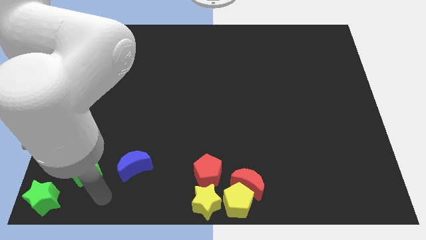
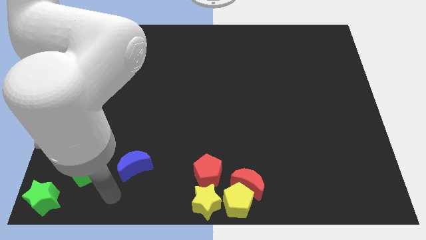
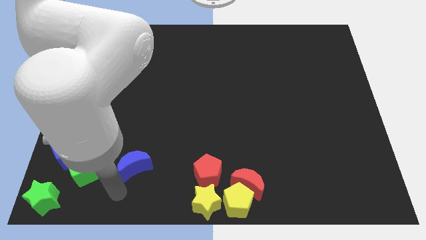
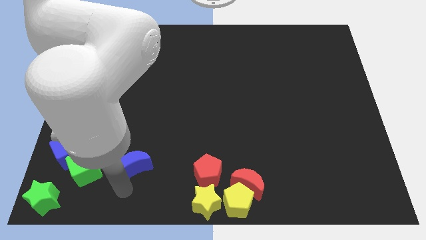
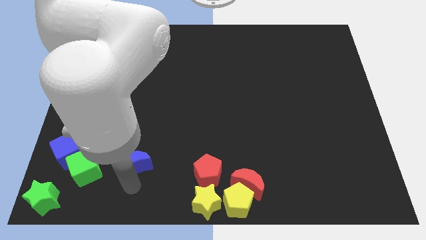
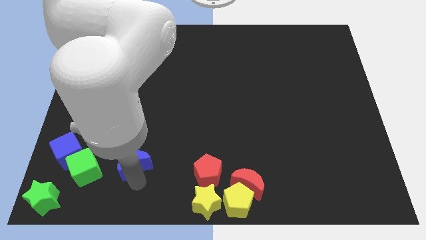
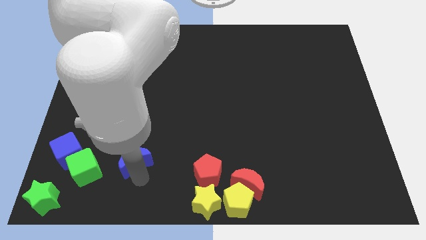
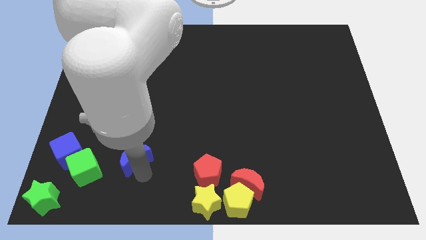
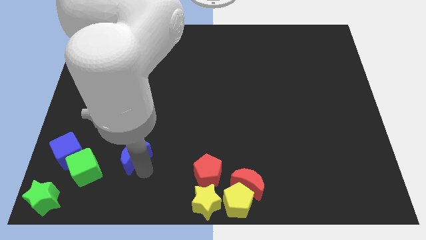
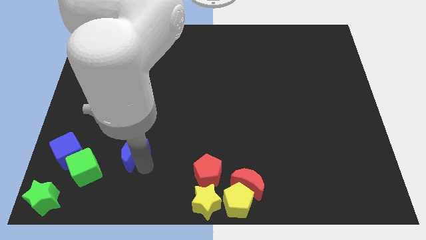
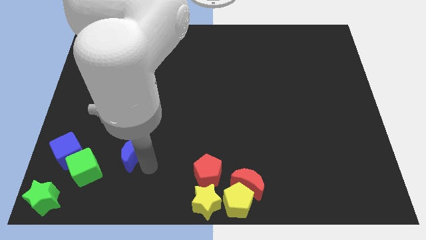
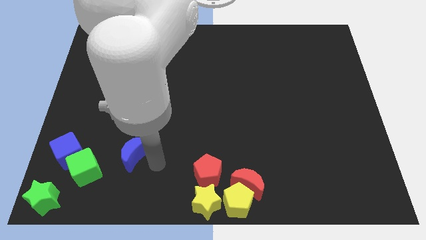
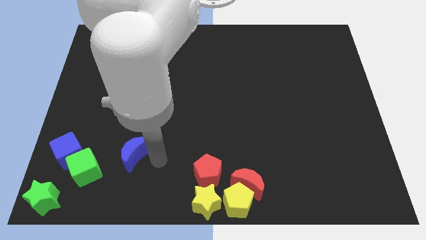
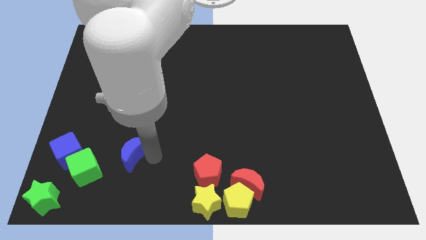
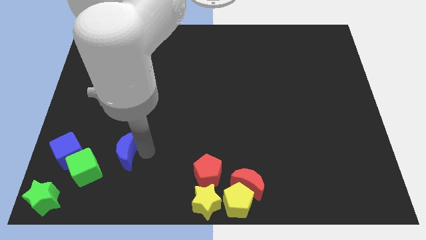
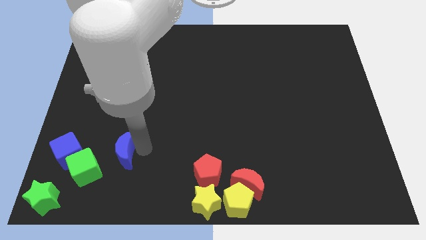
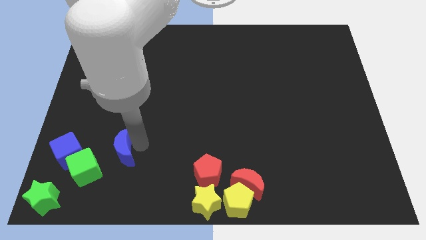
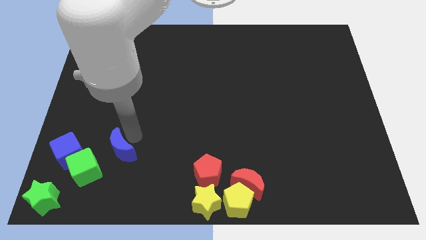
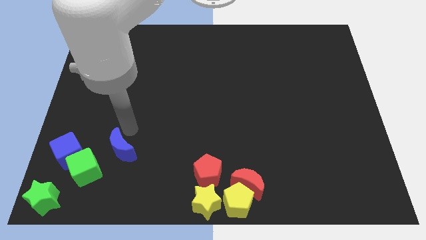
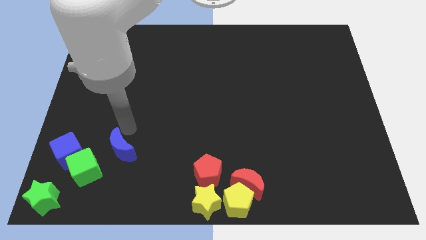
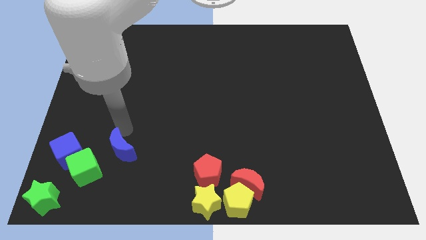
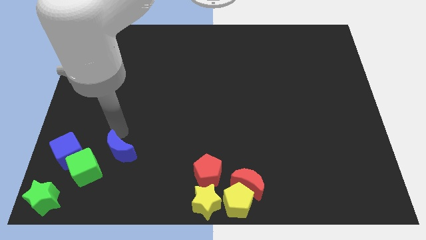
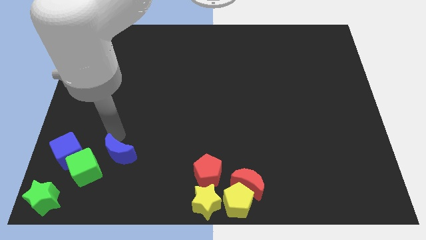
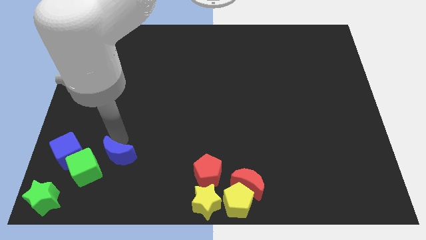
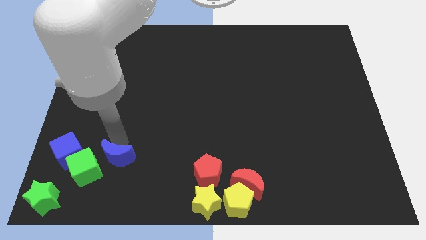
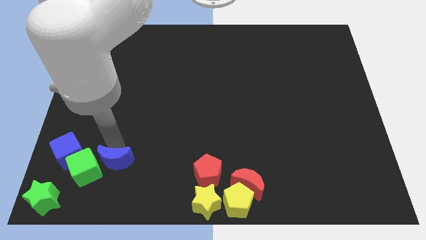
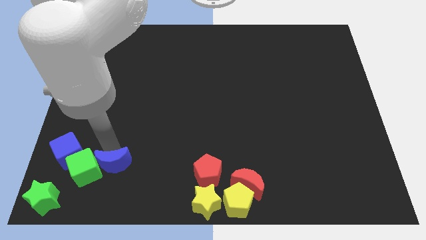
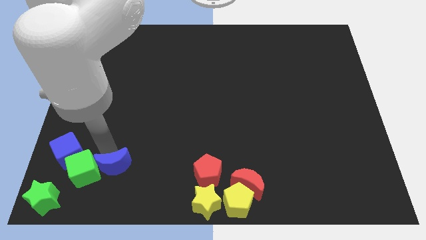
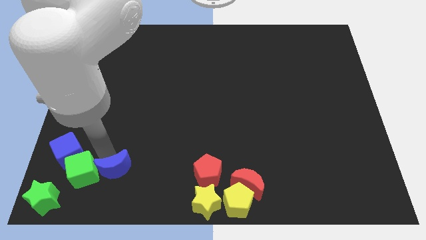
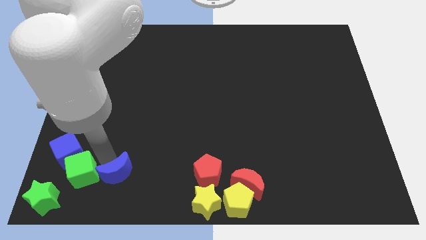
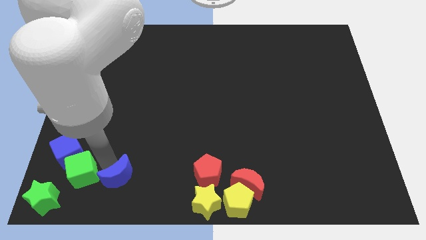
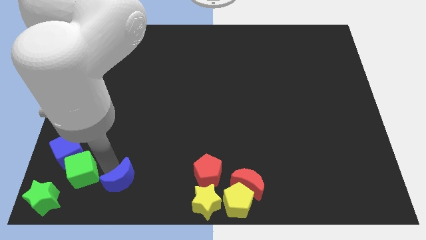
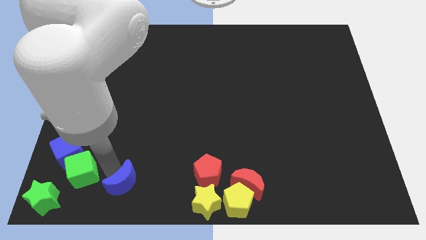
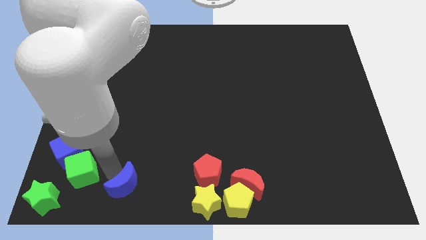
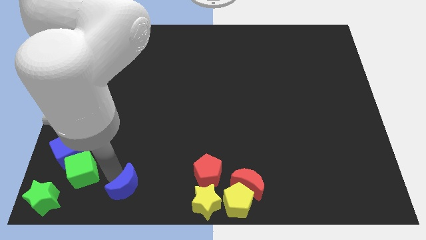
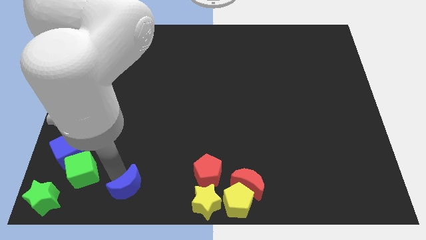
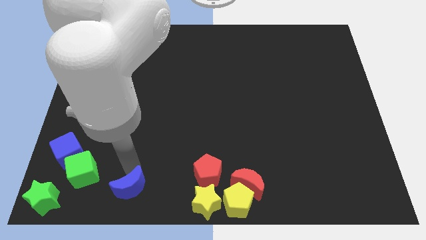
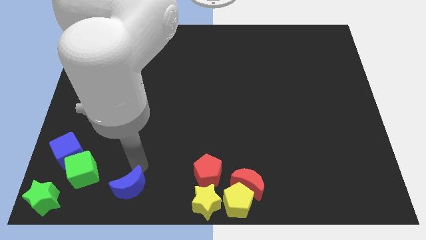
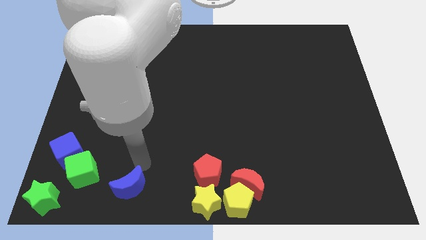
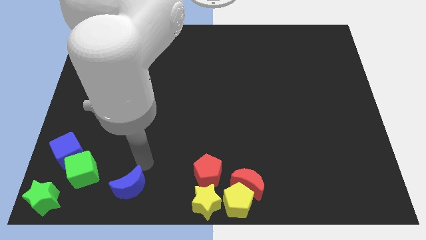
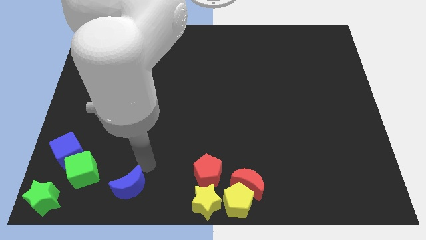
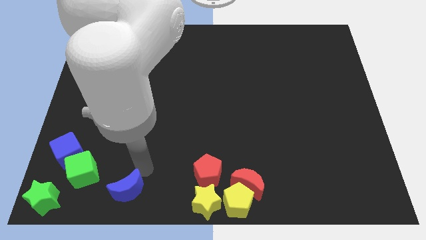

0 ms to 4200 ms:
move the blue crescent towards bottom

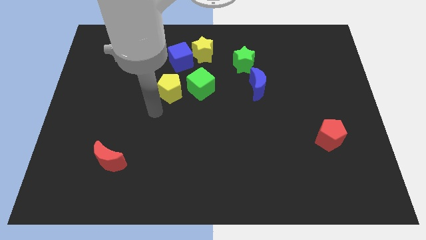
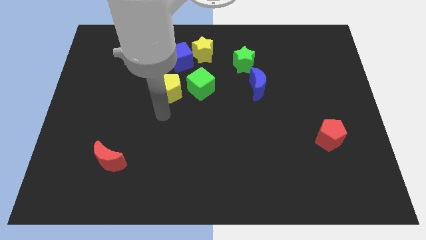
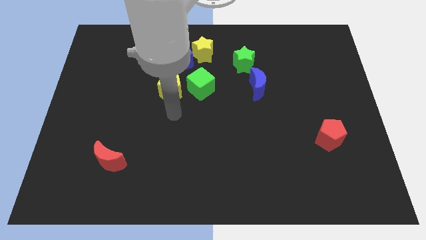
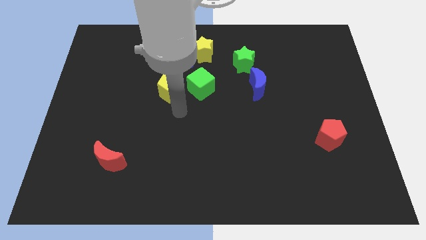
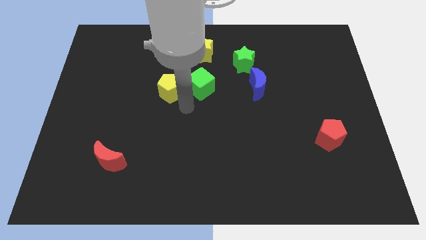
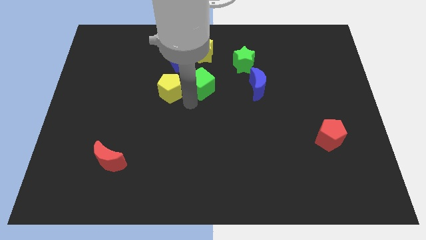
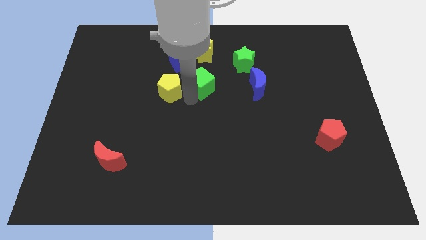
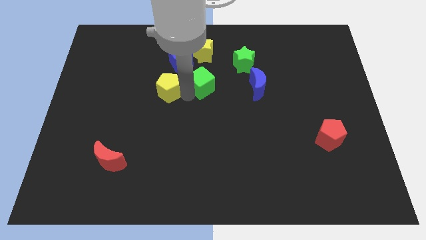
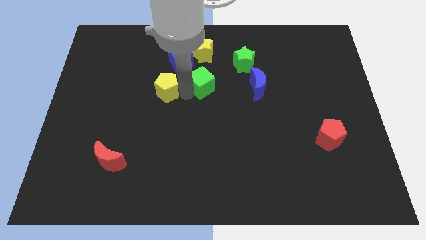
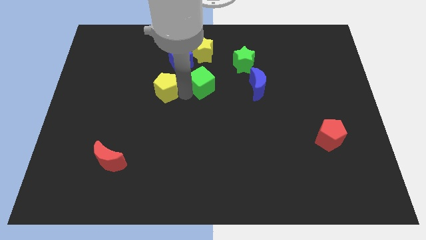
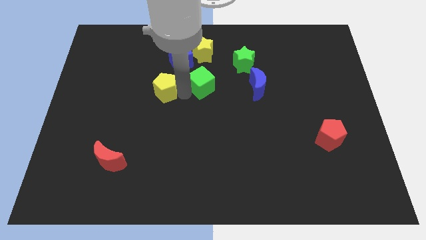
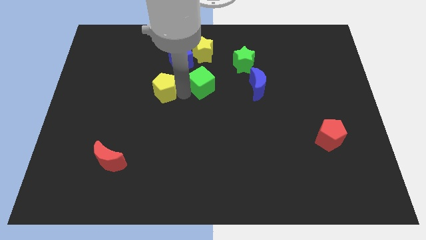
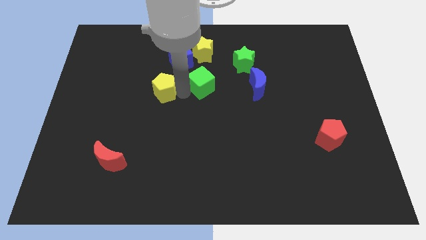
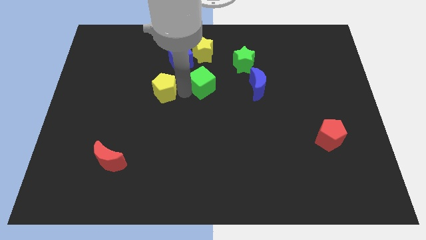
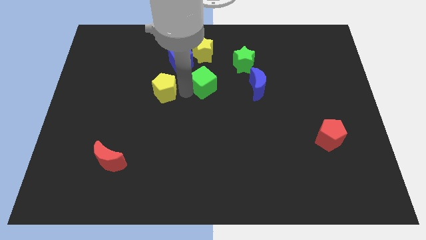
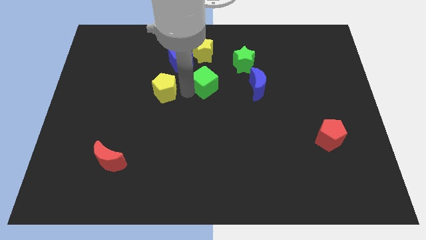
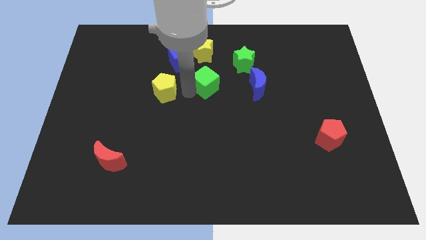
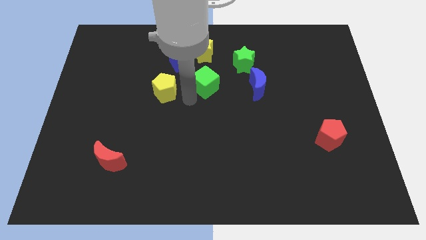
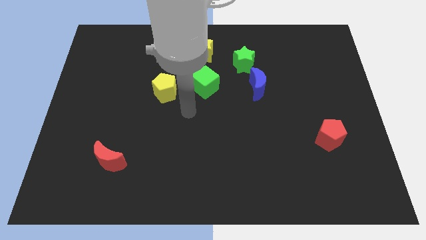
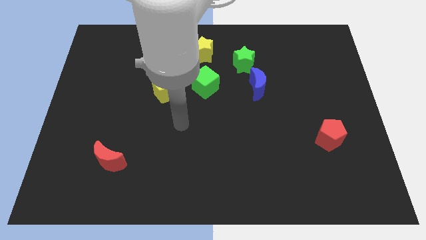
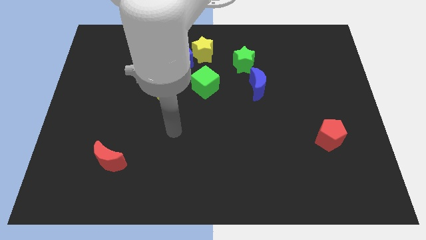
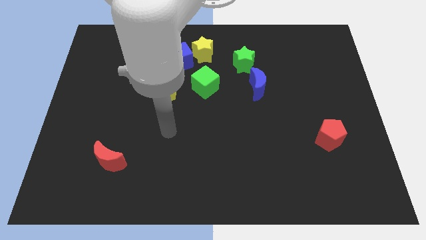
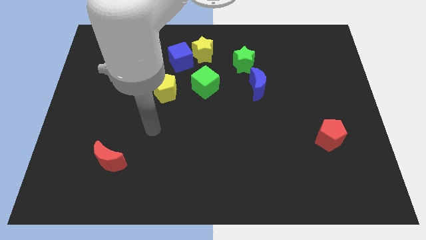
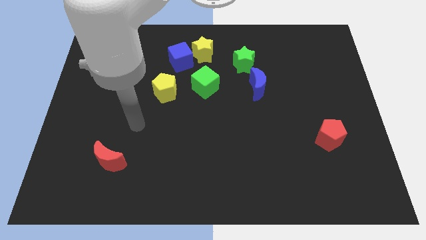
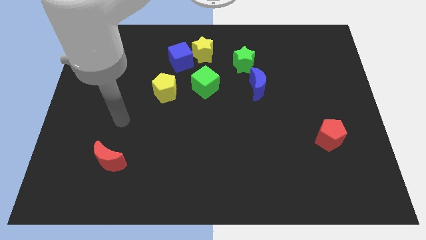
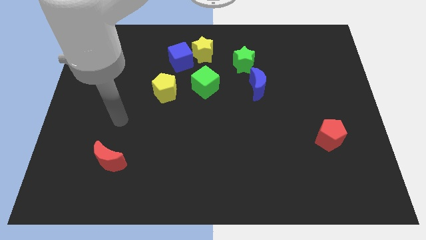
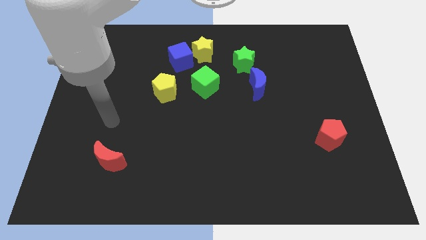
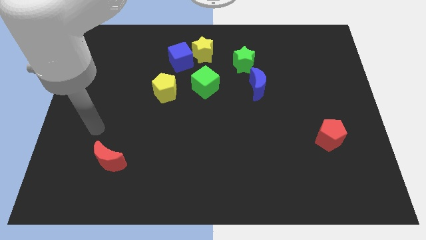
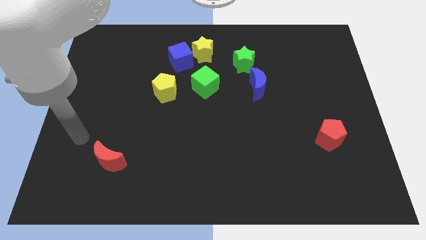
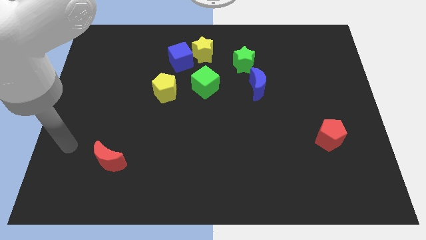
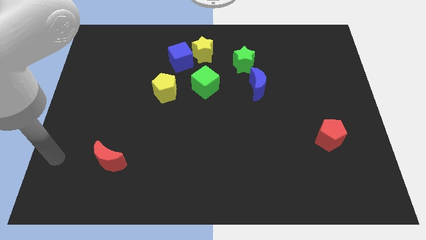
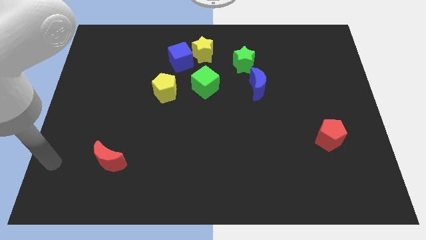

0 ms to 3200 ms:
separate the green cube and the yellow pentagon

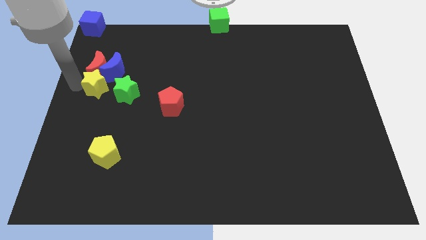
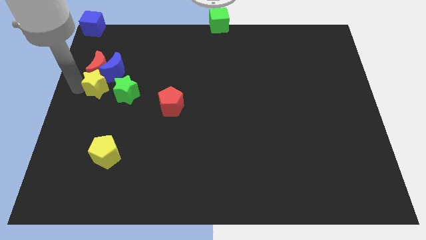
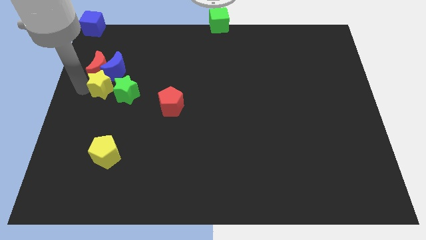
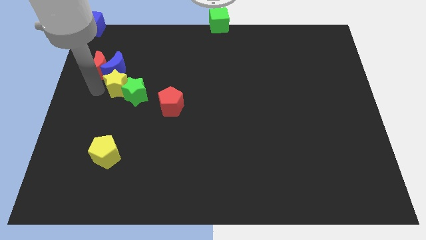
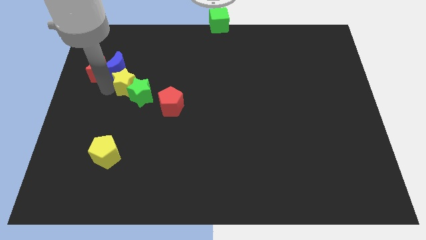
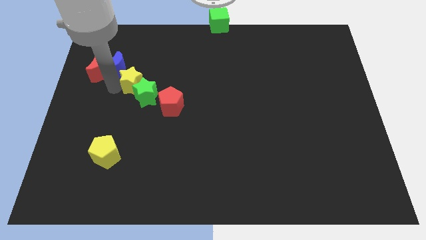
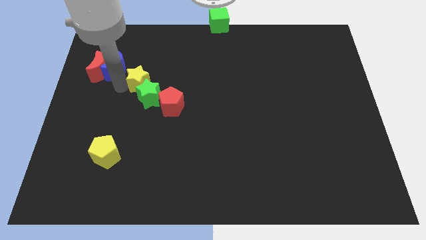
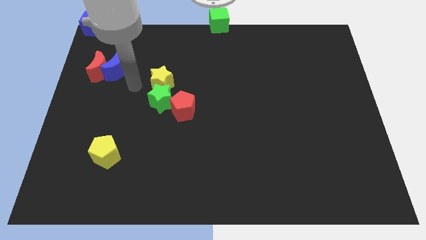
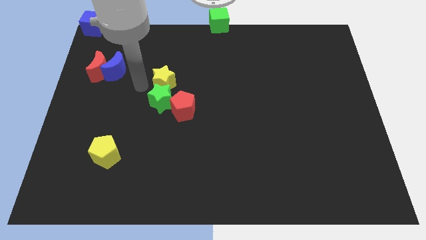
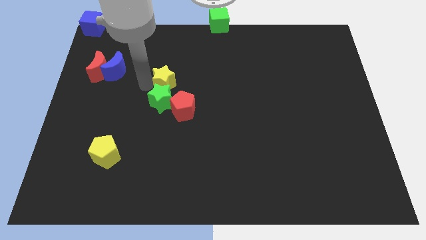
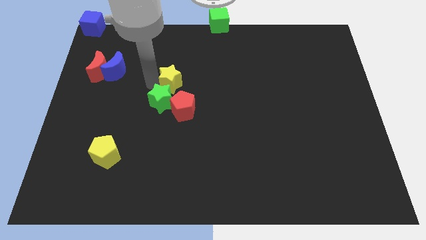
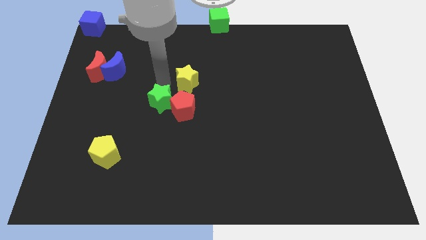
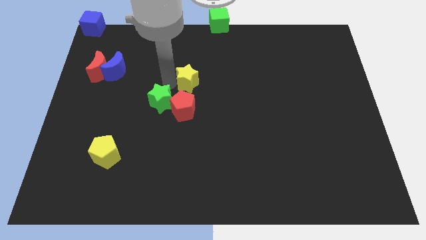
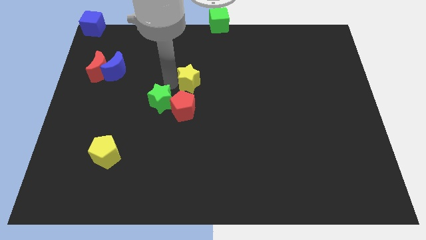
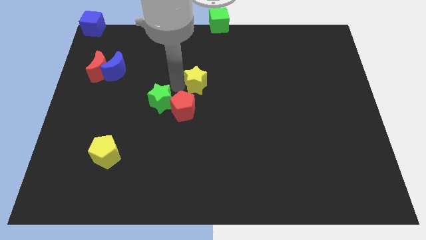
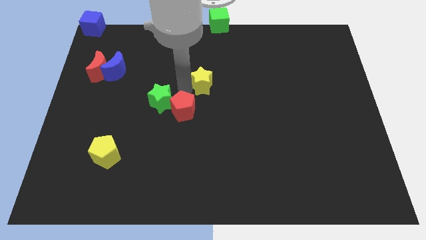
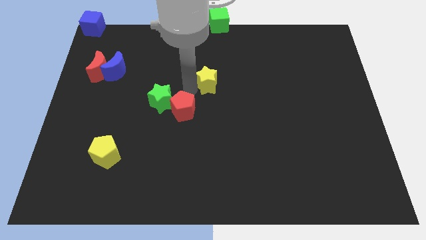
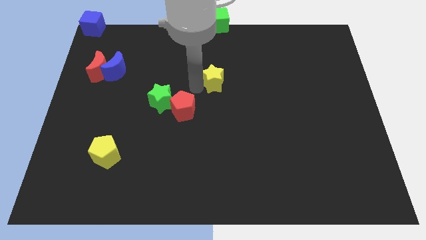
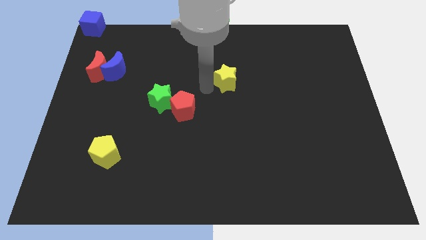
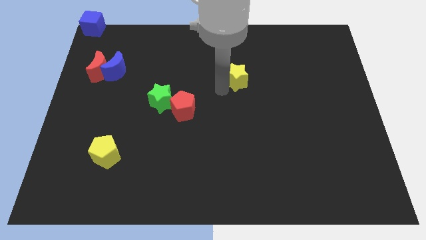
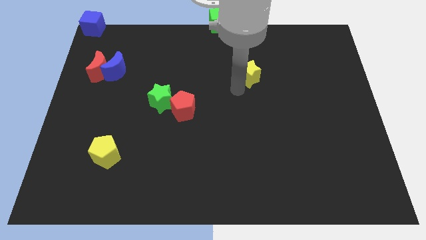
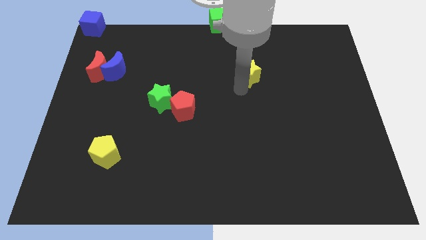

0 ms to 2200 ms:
slide yellow star away from green star
